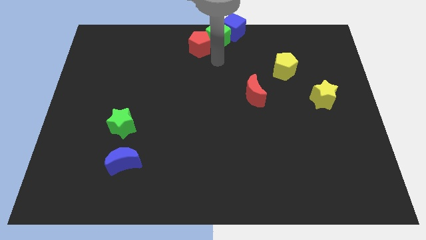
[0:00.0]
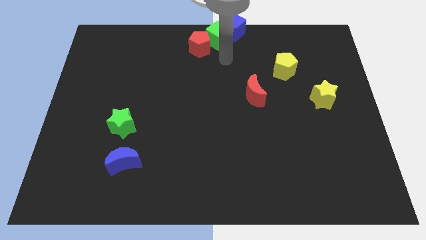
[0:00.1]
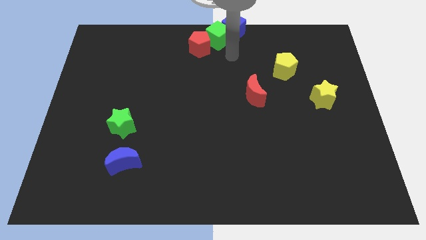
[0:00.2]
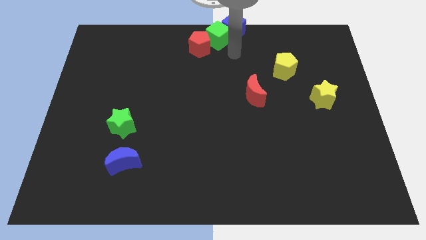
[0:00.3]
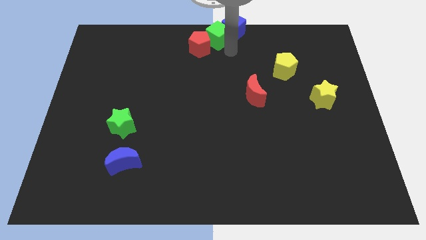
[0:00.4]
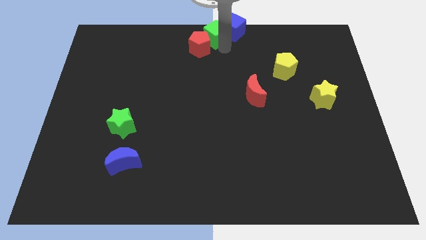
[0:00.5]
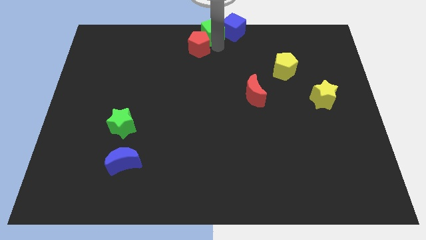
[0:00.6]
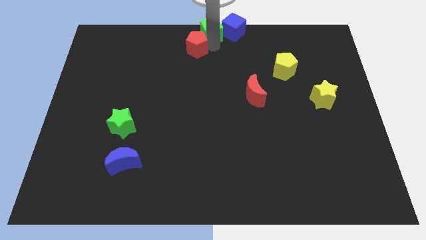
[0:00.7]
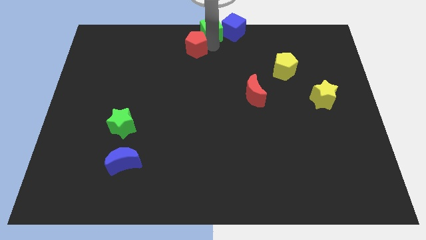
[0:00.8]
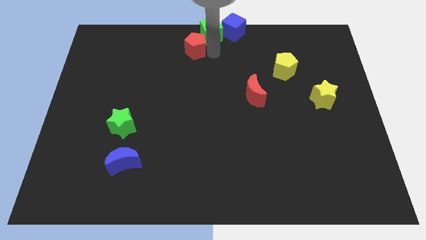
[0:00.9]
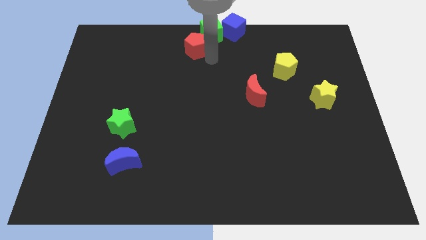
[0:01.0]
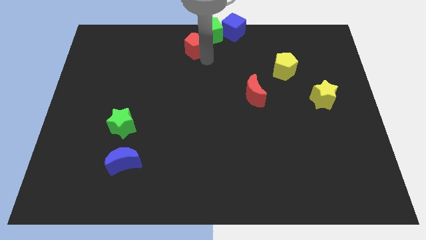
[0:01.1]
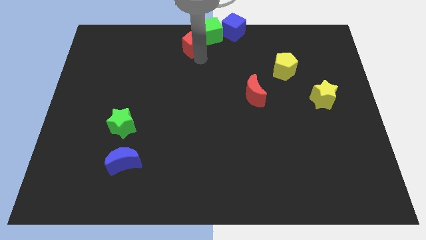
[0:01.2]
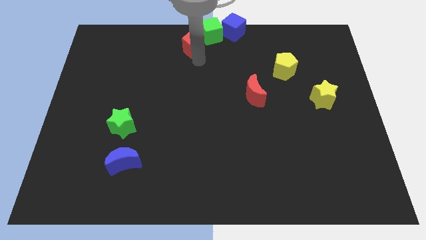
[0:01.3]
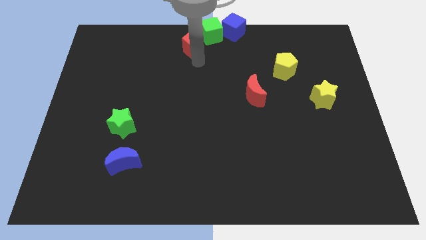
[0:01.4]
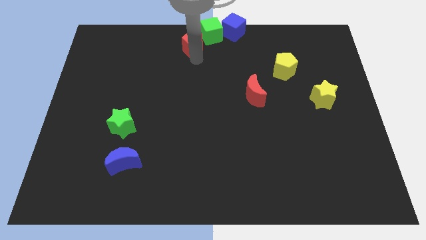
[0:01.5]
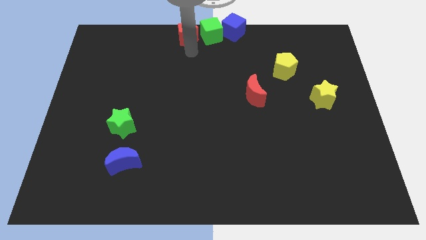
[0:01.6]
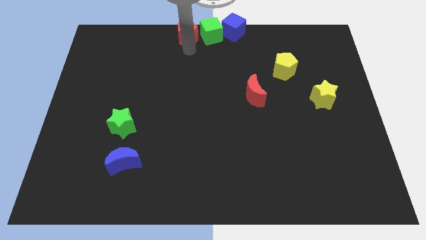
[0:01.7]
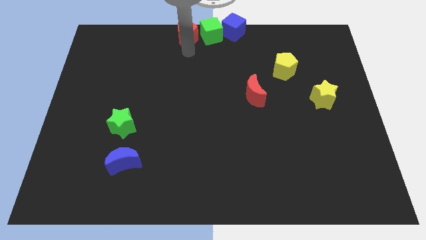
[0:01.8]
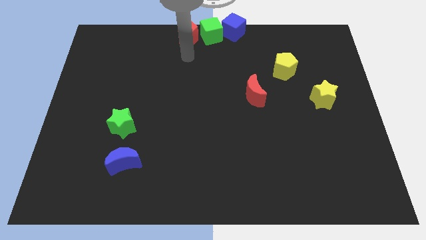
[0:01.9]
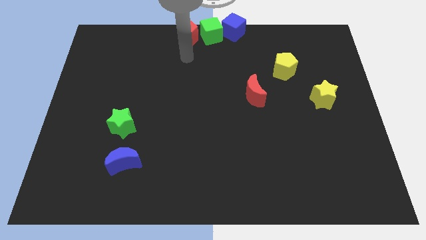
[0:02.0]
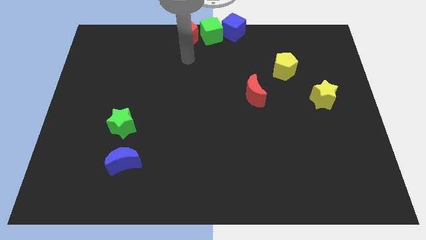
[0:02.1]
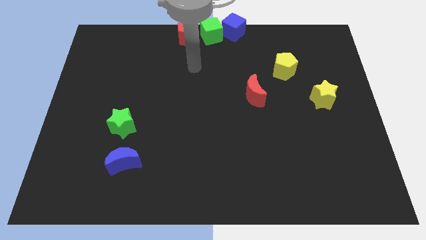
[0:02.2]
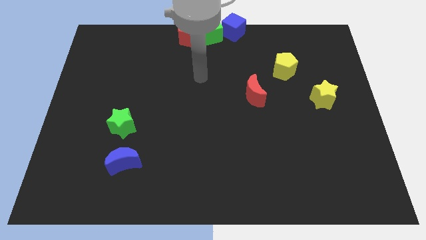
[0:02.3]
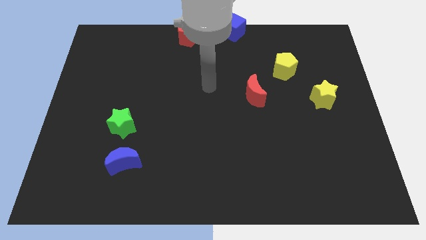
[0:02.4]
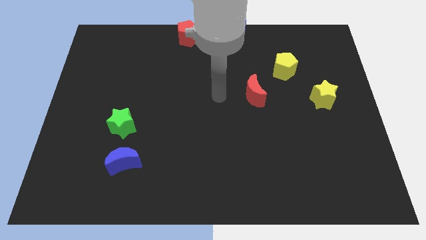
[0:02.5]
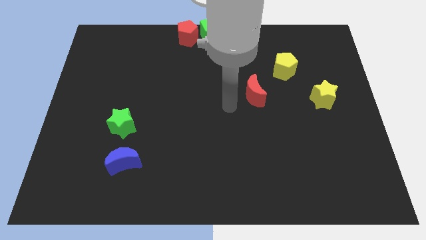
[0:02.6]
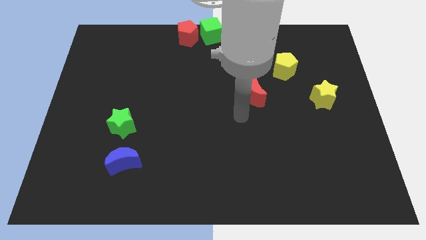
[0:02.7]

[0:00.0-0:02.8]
place the red pentagon in the left of green cube

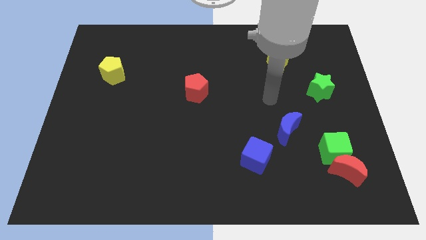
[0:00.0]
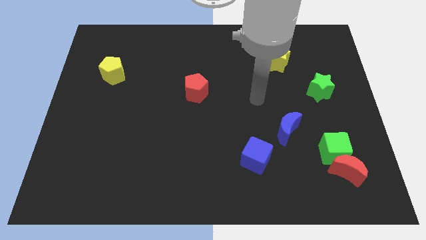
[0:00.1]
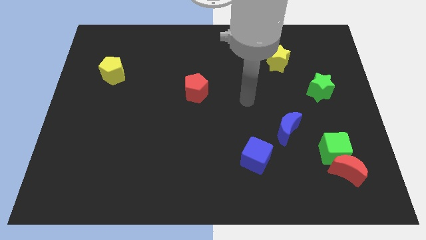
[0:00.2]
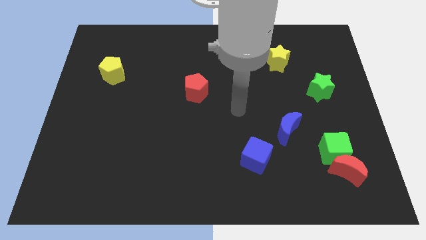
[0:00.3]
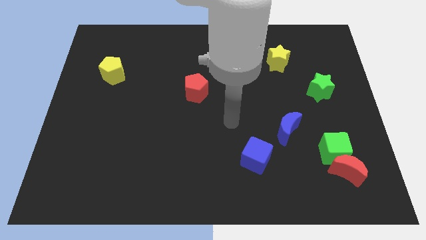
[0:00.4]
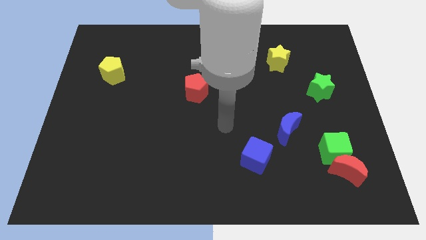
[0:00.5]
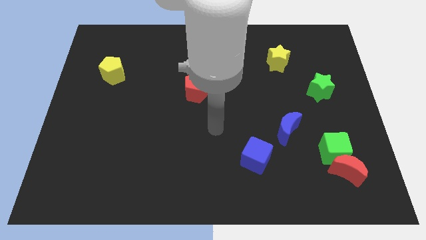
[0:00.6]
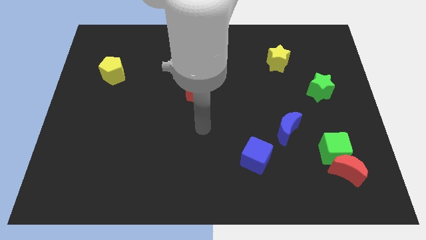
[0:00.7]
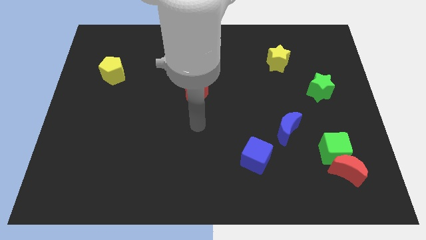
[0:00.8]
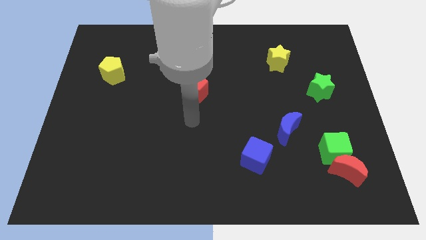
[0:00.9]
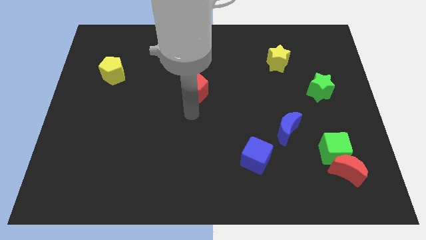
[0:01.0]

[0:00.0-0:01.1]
place your arm to the bottom of the red pentagon

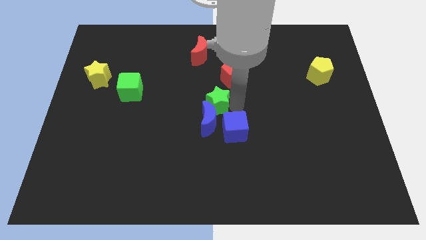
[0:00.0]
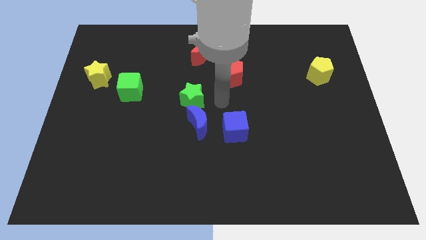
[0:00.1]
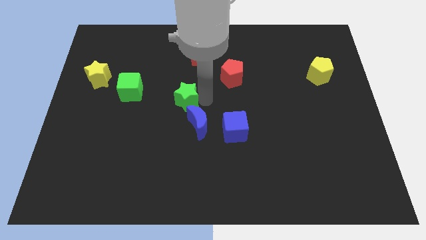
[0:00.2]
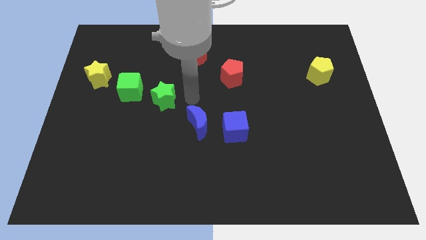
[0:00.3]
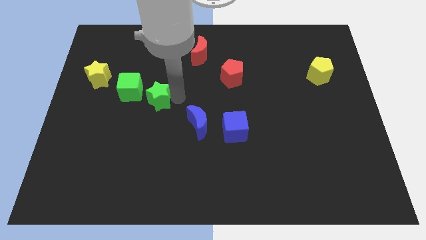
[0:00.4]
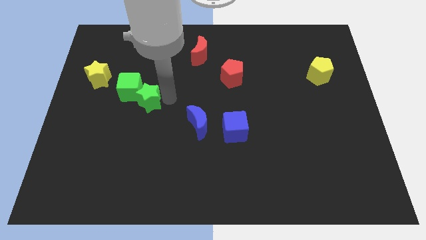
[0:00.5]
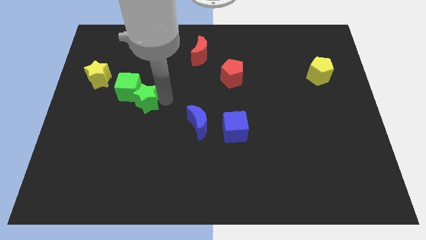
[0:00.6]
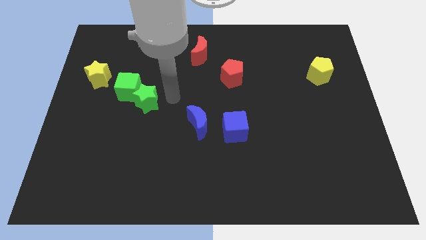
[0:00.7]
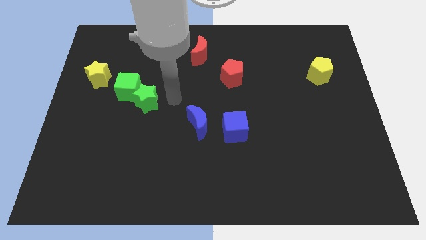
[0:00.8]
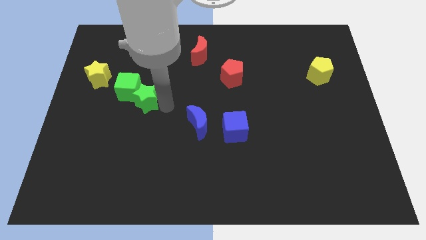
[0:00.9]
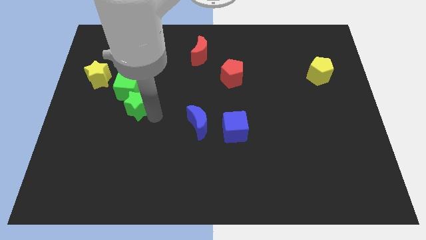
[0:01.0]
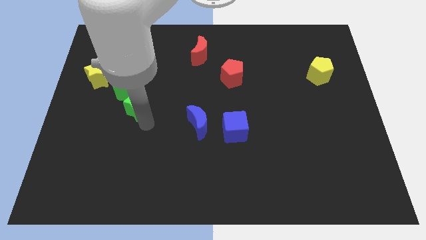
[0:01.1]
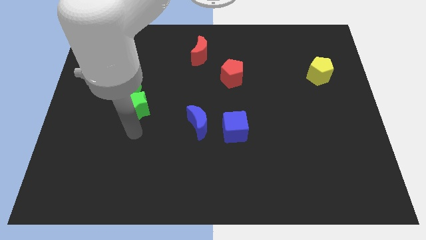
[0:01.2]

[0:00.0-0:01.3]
place the green star at the bottom right side of the green cube

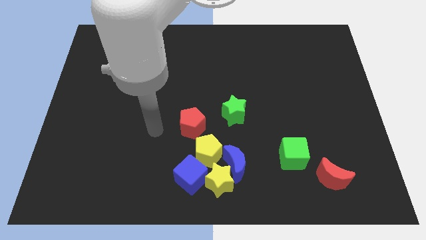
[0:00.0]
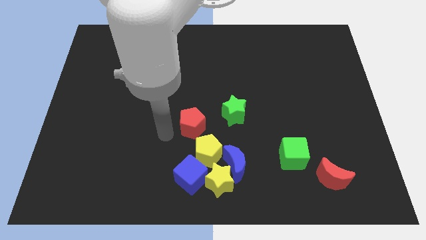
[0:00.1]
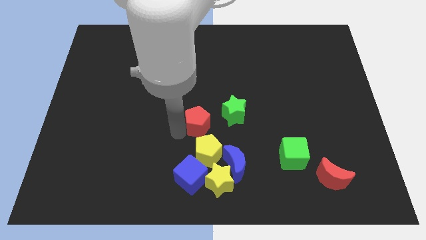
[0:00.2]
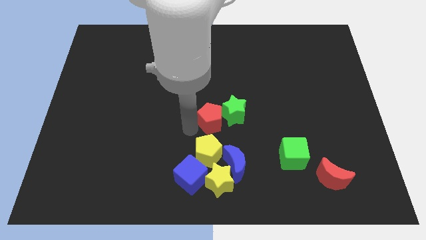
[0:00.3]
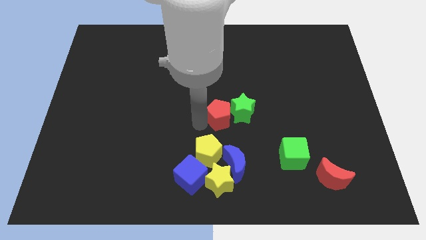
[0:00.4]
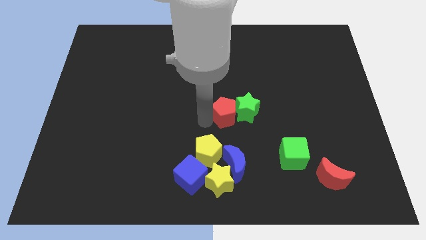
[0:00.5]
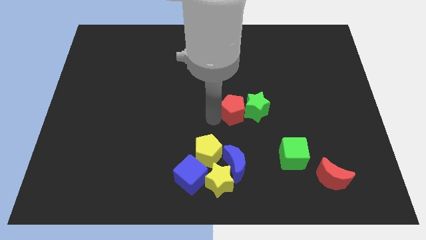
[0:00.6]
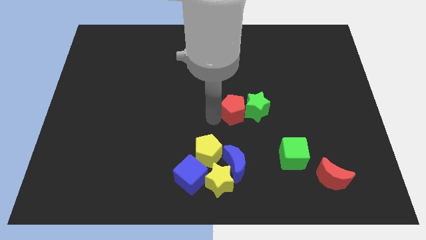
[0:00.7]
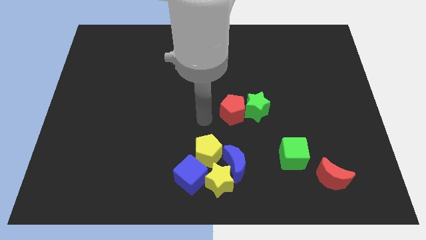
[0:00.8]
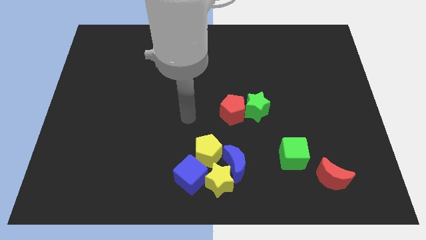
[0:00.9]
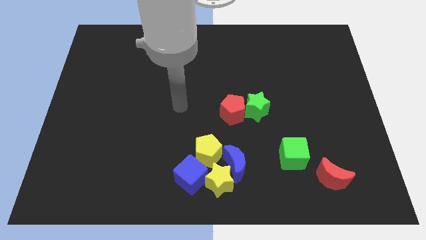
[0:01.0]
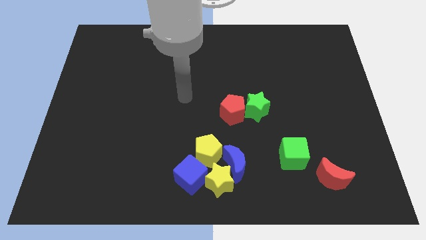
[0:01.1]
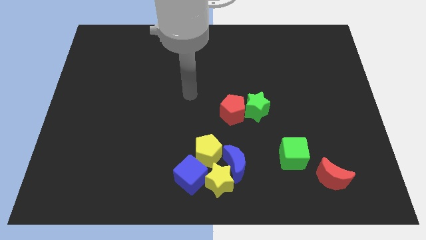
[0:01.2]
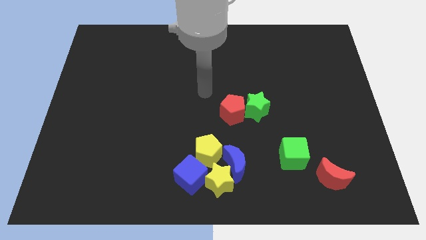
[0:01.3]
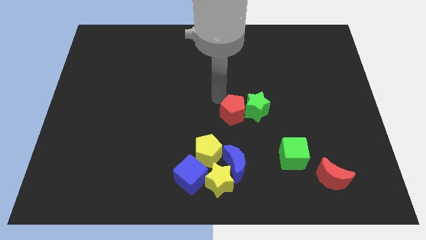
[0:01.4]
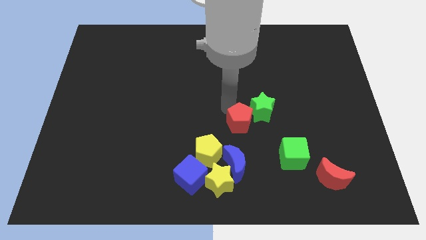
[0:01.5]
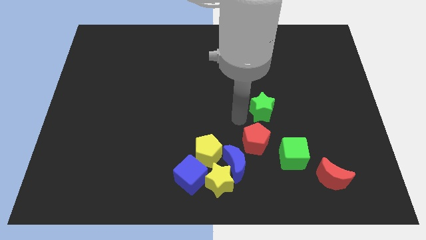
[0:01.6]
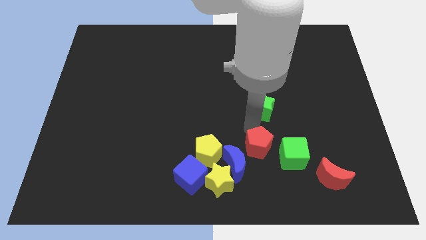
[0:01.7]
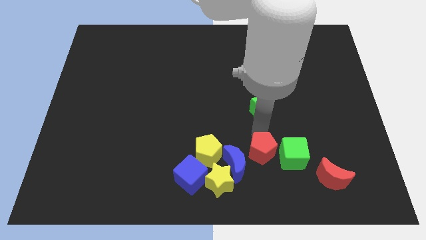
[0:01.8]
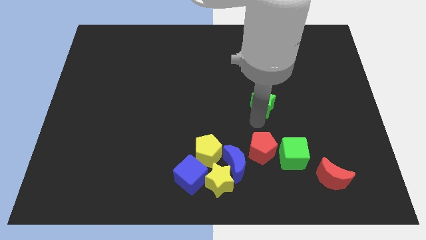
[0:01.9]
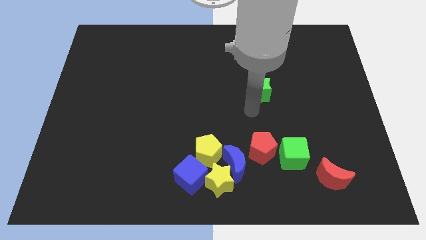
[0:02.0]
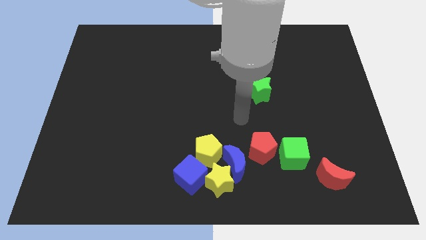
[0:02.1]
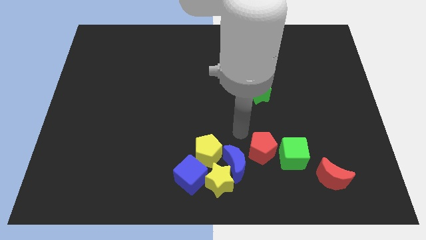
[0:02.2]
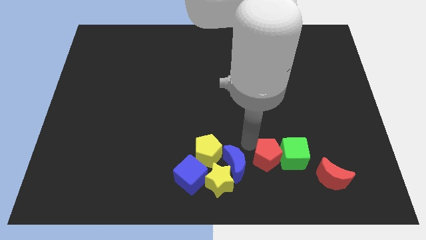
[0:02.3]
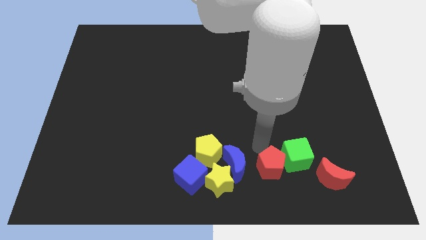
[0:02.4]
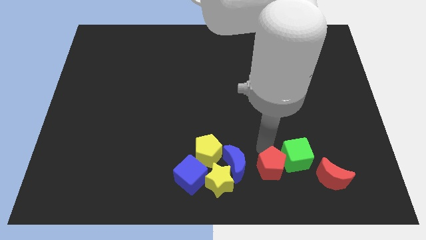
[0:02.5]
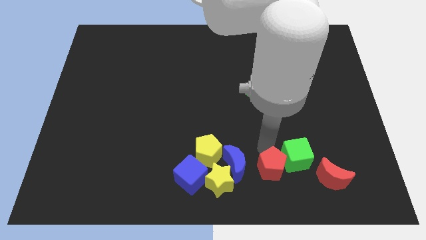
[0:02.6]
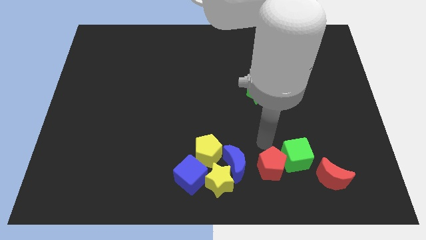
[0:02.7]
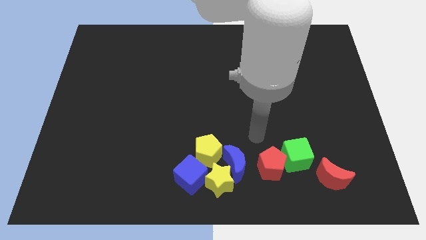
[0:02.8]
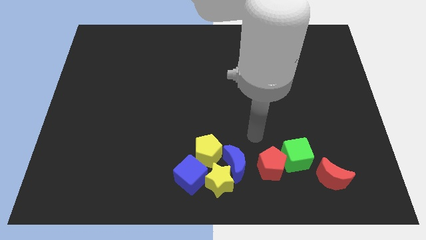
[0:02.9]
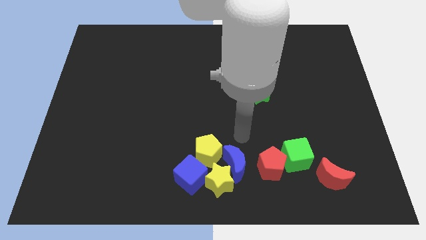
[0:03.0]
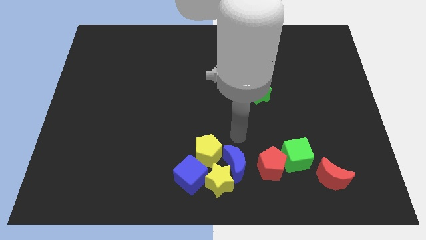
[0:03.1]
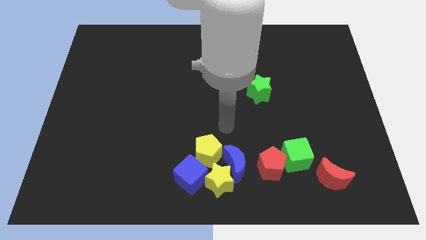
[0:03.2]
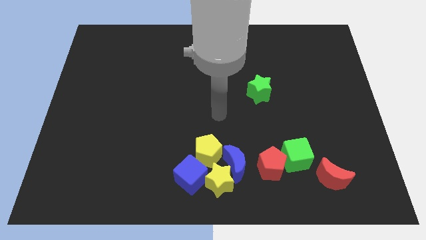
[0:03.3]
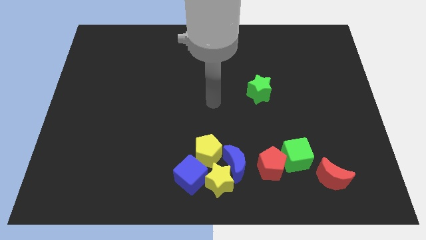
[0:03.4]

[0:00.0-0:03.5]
place the red pentagon left to the green cube

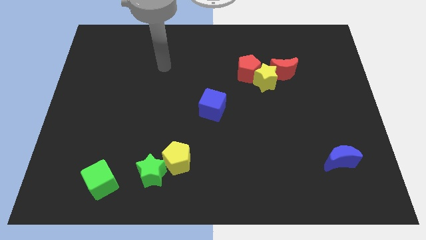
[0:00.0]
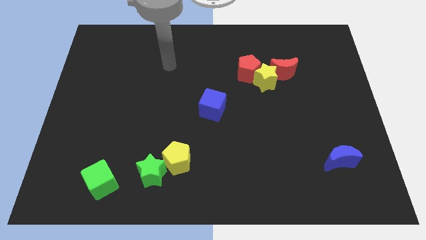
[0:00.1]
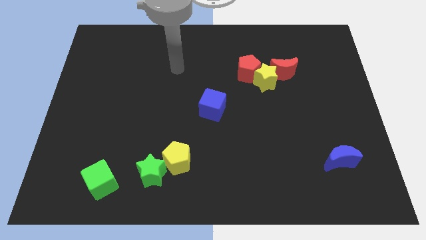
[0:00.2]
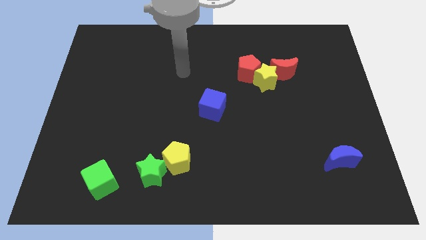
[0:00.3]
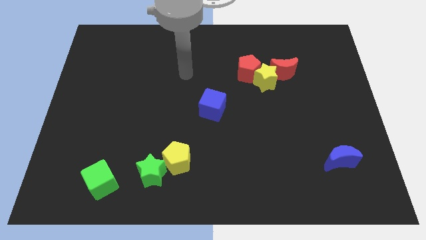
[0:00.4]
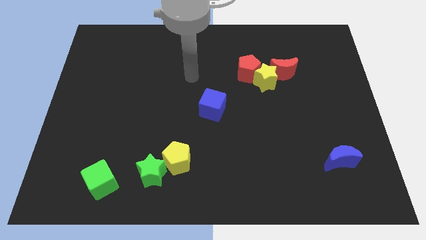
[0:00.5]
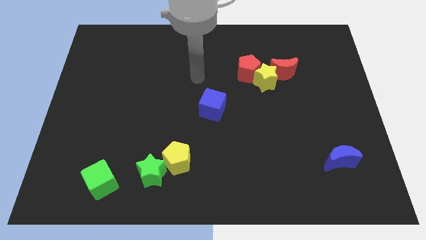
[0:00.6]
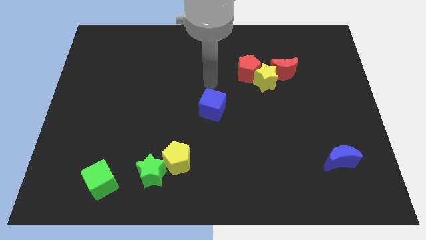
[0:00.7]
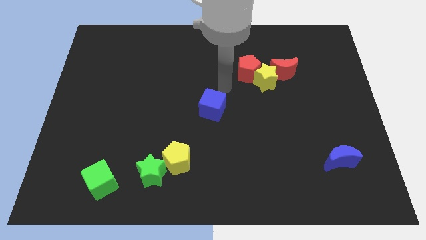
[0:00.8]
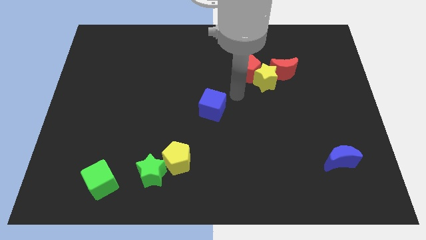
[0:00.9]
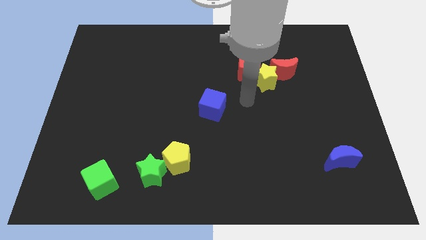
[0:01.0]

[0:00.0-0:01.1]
point your arm at the bottom of the red pentagon
